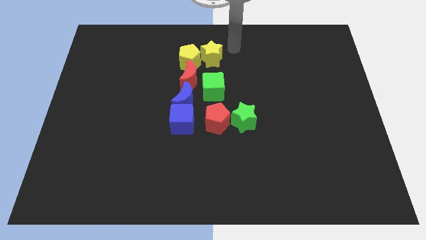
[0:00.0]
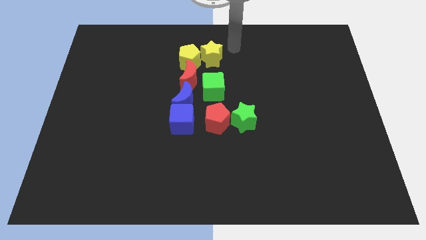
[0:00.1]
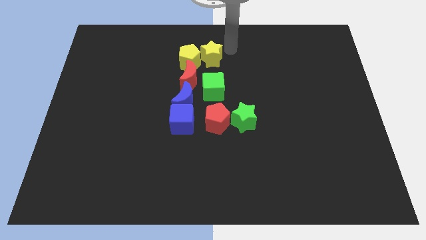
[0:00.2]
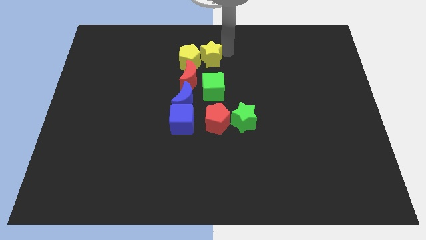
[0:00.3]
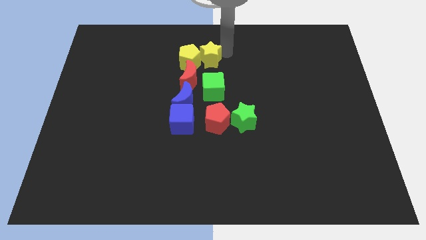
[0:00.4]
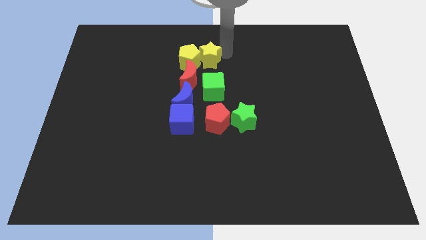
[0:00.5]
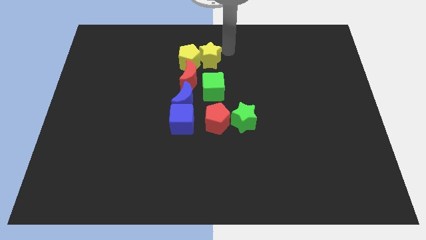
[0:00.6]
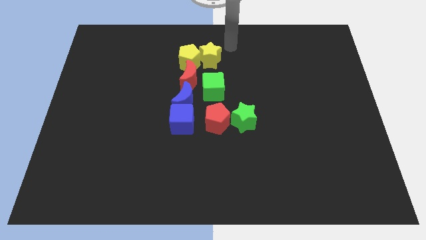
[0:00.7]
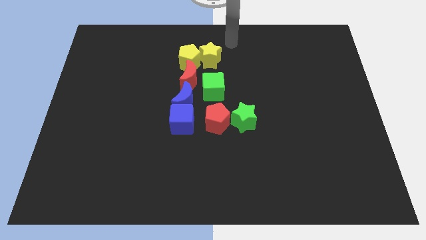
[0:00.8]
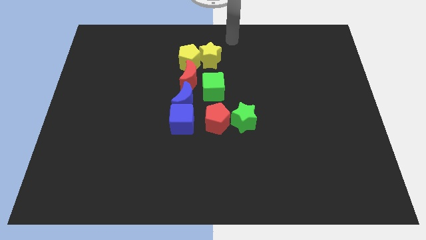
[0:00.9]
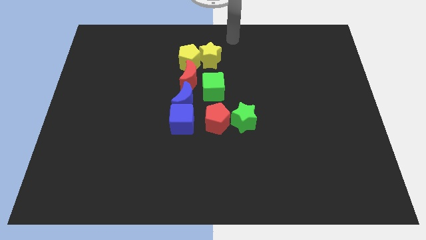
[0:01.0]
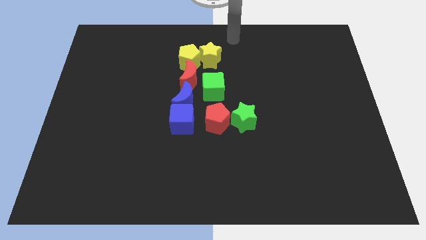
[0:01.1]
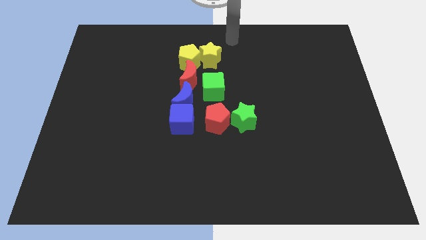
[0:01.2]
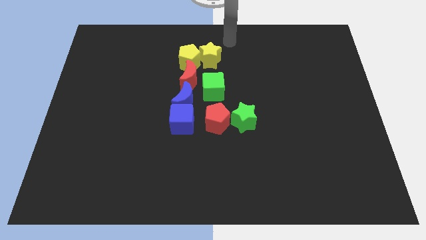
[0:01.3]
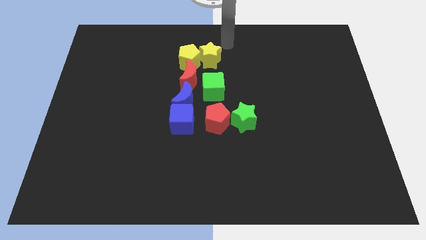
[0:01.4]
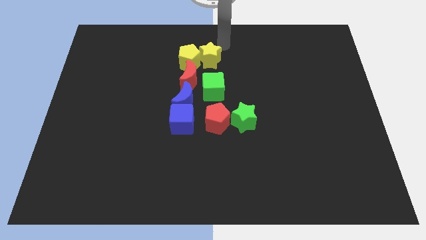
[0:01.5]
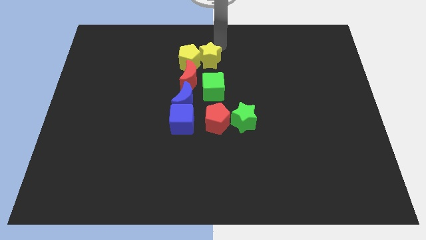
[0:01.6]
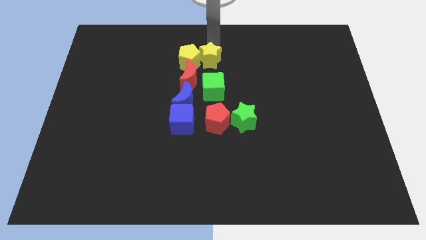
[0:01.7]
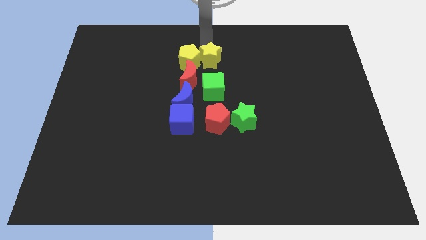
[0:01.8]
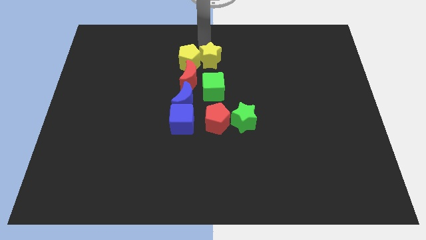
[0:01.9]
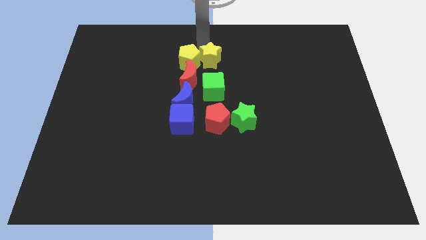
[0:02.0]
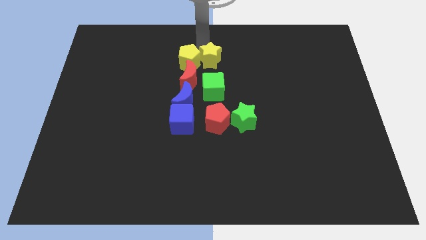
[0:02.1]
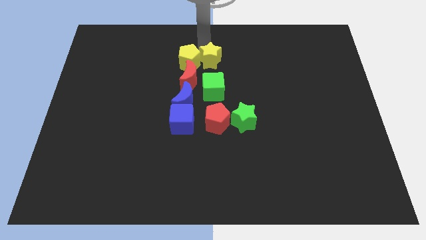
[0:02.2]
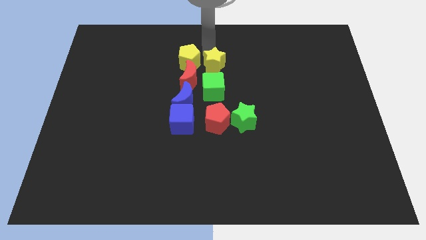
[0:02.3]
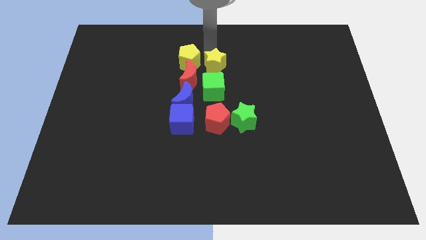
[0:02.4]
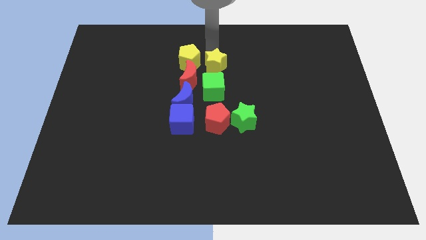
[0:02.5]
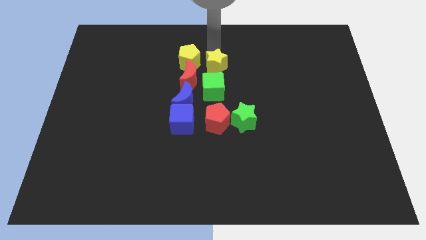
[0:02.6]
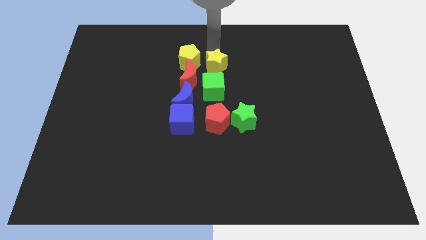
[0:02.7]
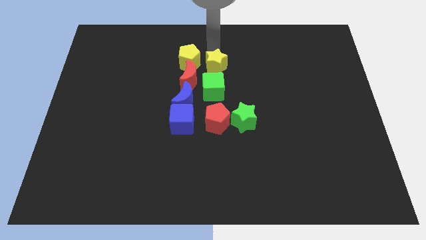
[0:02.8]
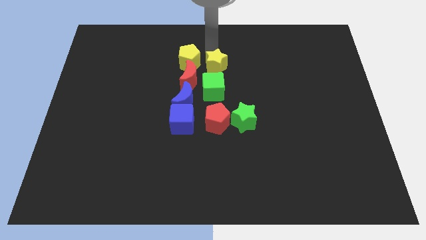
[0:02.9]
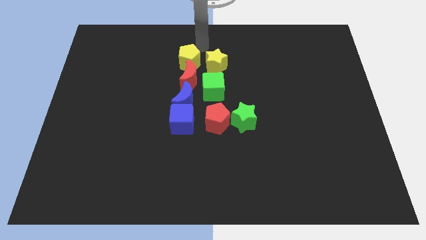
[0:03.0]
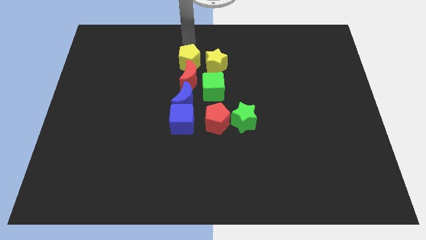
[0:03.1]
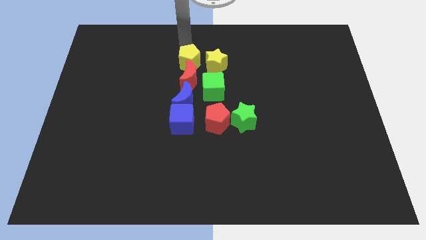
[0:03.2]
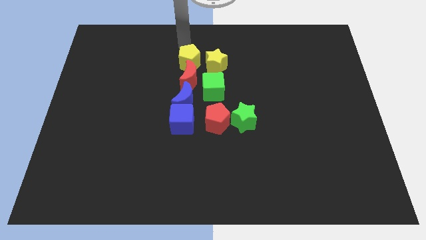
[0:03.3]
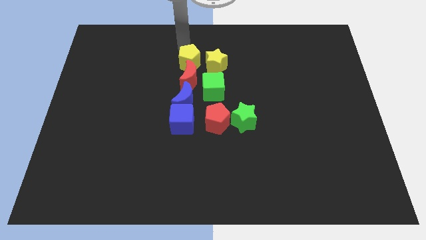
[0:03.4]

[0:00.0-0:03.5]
push the yellow star slightly towards the green cube

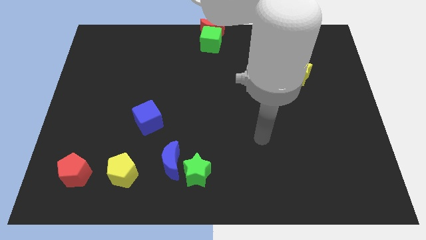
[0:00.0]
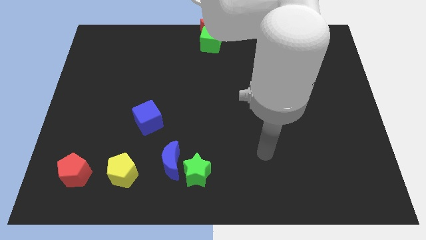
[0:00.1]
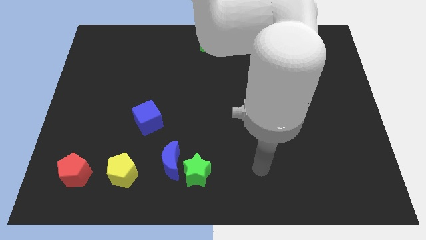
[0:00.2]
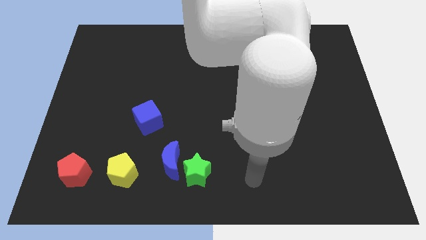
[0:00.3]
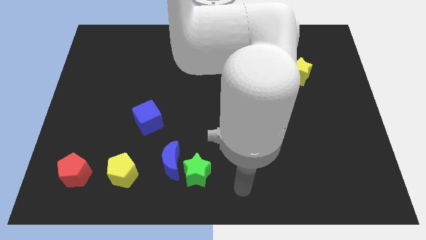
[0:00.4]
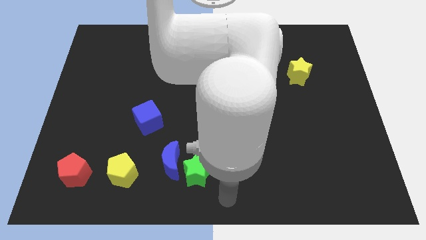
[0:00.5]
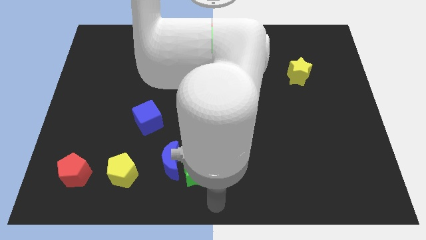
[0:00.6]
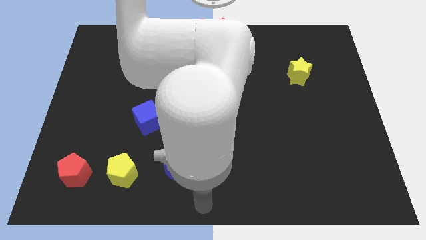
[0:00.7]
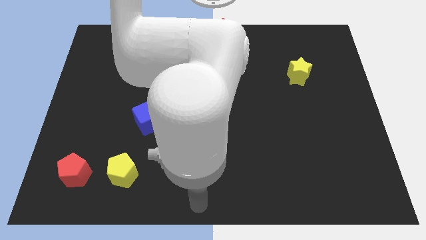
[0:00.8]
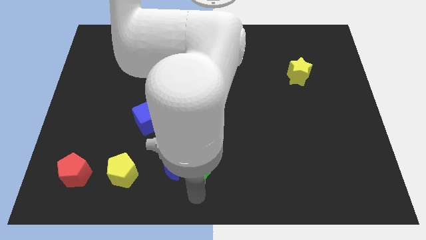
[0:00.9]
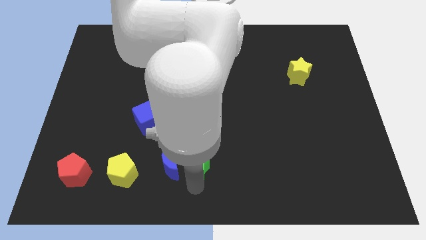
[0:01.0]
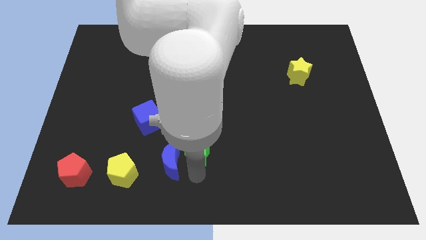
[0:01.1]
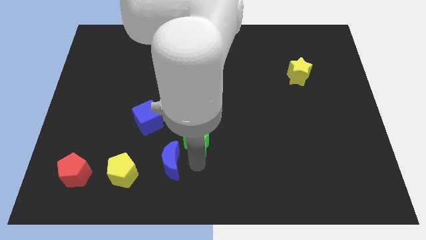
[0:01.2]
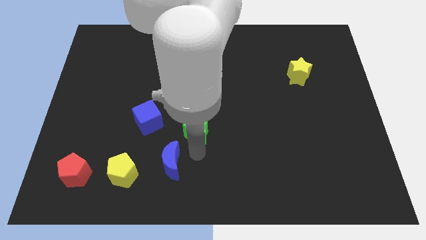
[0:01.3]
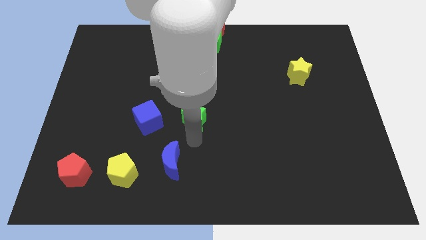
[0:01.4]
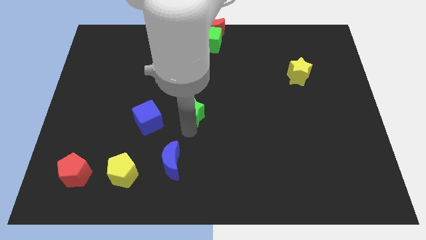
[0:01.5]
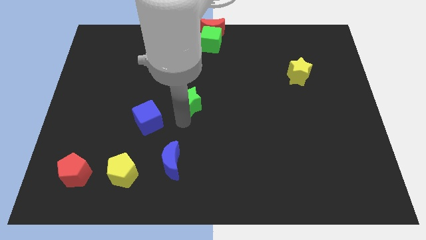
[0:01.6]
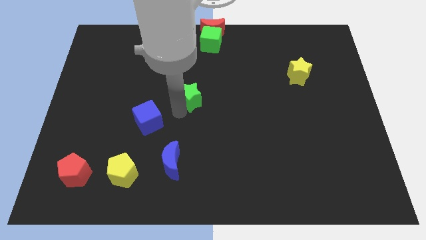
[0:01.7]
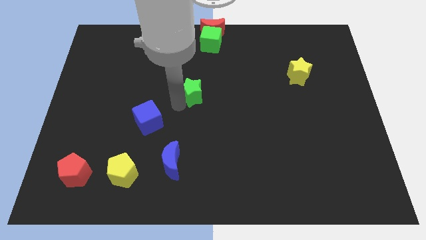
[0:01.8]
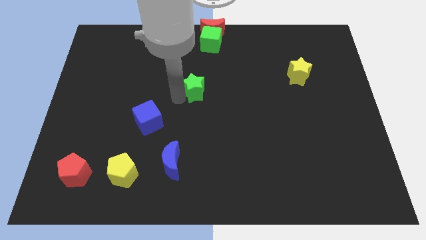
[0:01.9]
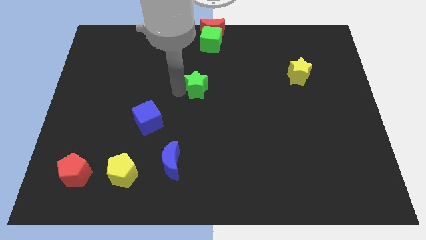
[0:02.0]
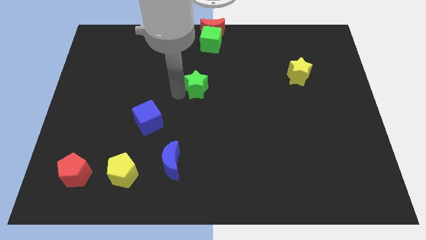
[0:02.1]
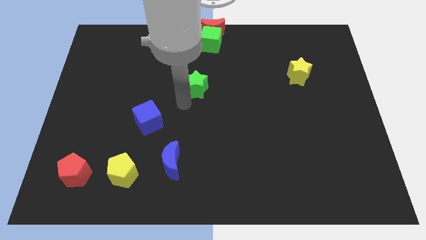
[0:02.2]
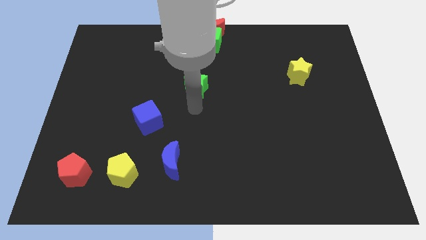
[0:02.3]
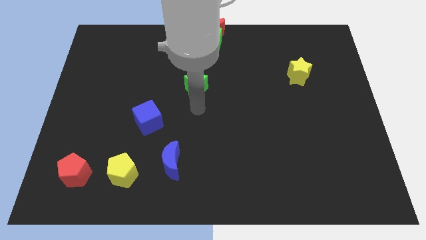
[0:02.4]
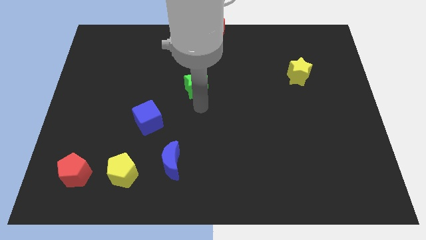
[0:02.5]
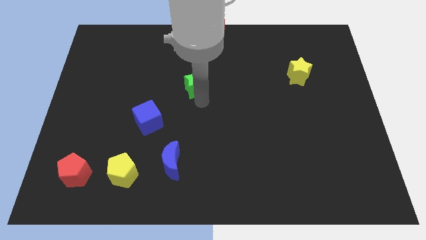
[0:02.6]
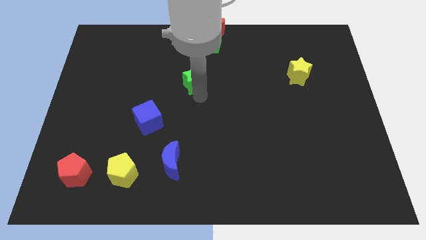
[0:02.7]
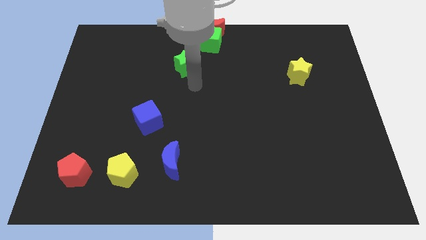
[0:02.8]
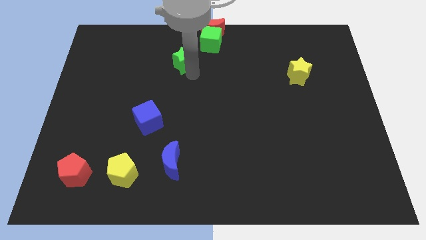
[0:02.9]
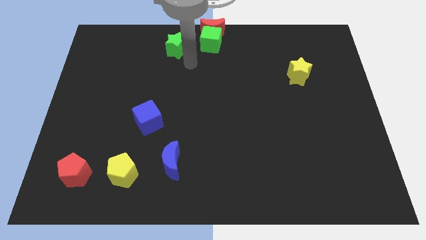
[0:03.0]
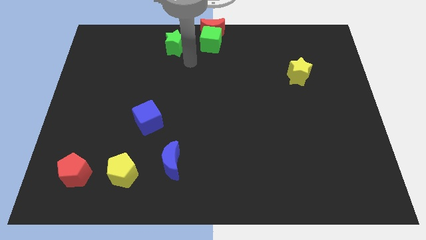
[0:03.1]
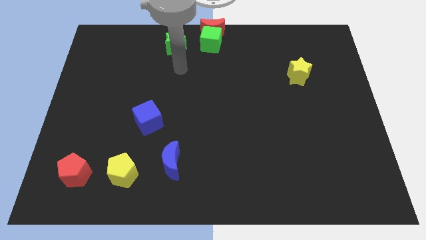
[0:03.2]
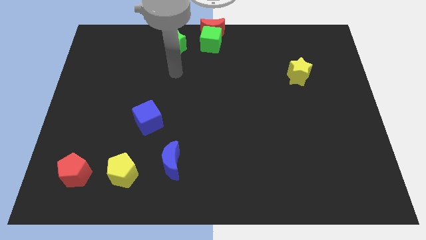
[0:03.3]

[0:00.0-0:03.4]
place green star to the left o green cube

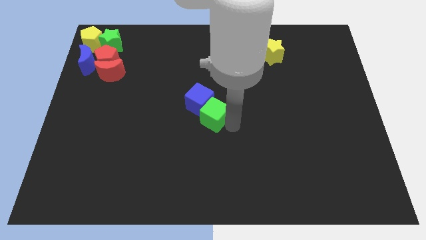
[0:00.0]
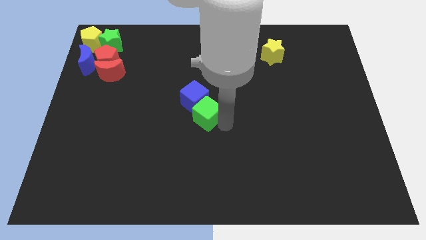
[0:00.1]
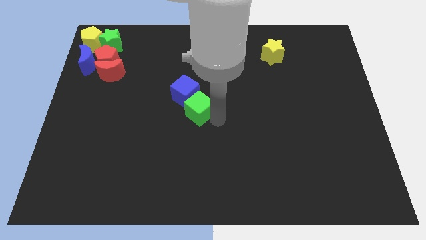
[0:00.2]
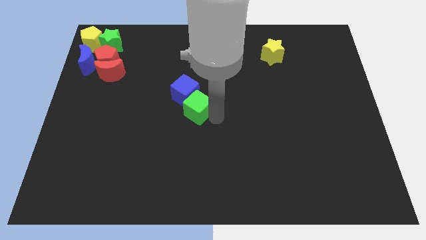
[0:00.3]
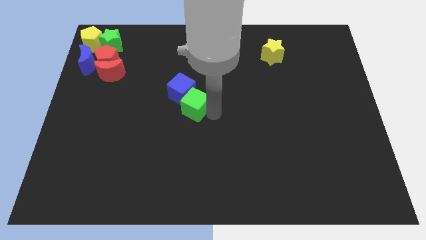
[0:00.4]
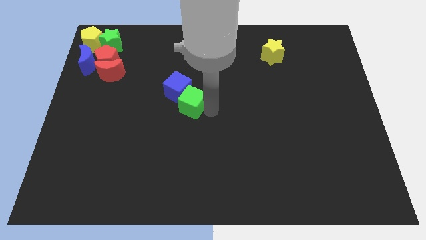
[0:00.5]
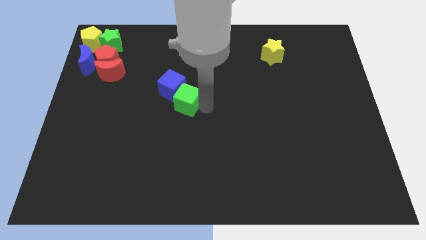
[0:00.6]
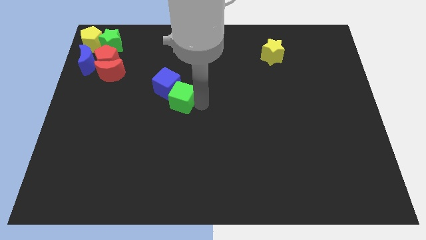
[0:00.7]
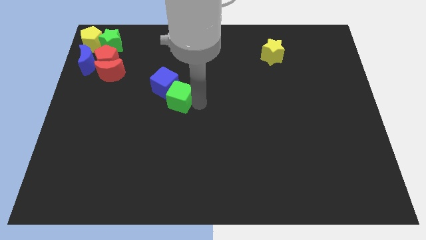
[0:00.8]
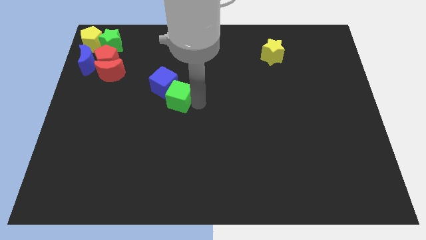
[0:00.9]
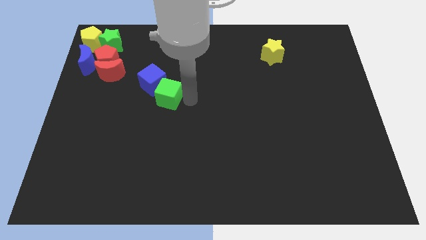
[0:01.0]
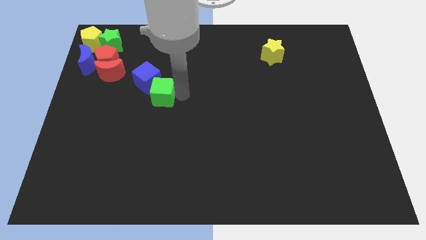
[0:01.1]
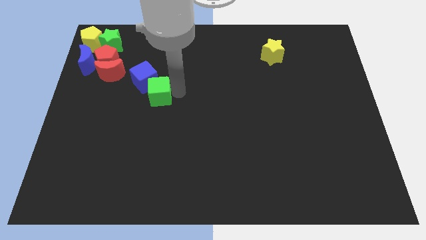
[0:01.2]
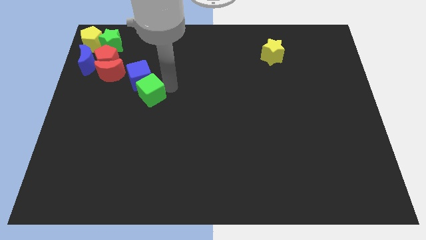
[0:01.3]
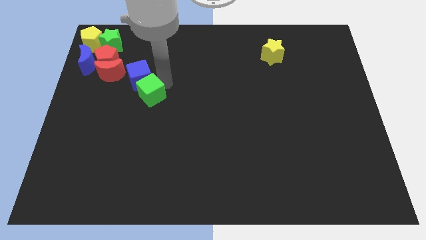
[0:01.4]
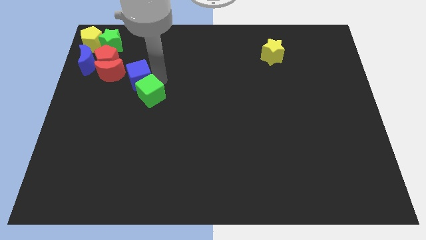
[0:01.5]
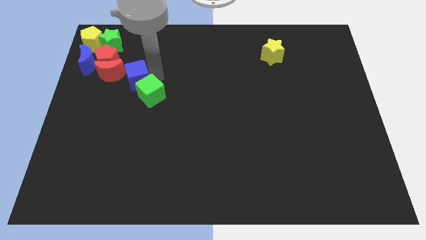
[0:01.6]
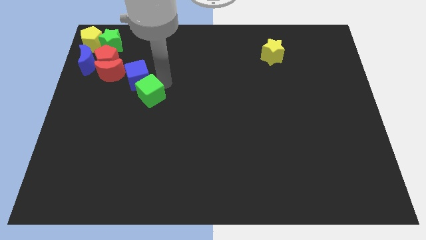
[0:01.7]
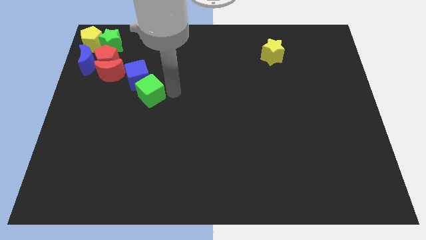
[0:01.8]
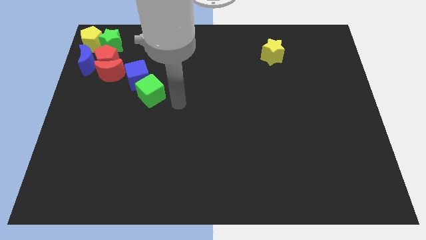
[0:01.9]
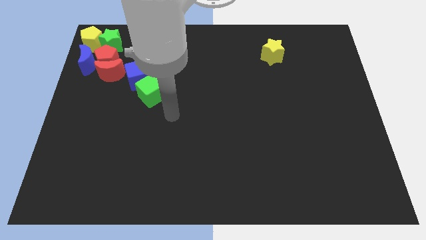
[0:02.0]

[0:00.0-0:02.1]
push the blue cube to the top left corner of the board with the green cube
